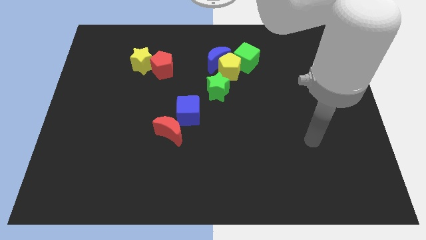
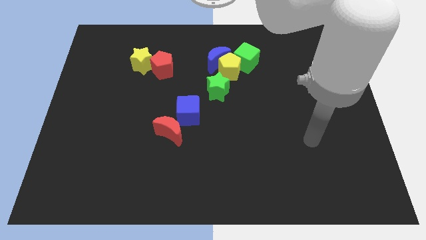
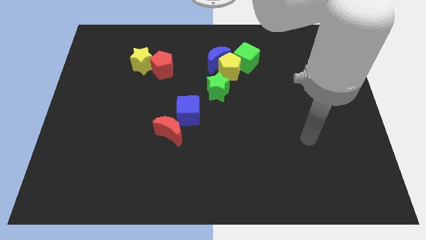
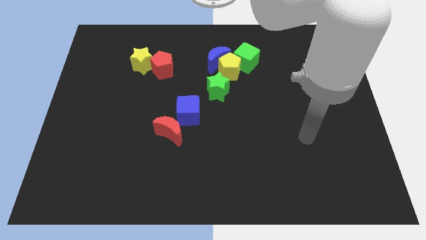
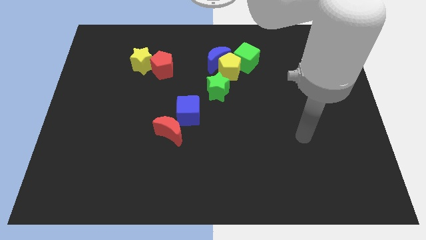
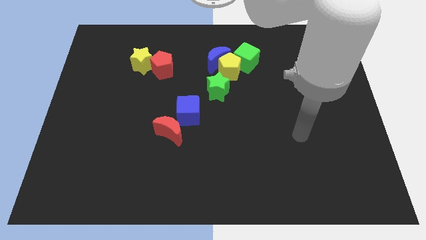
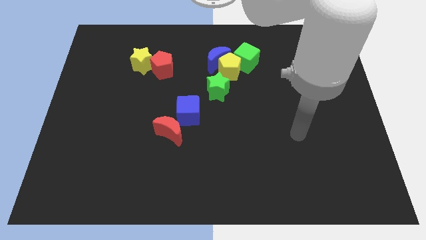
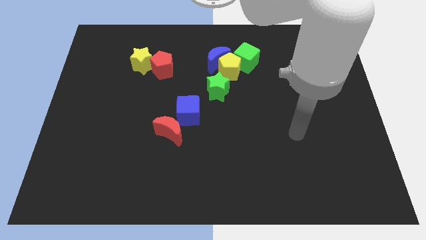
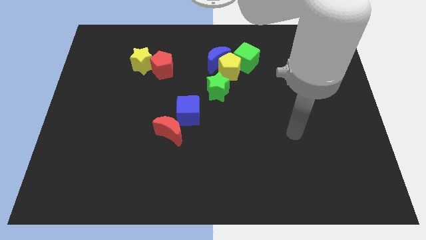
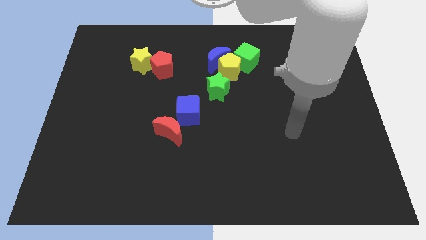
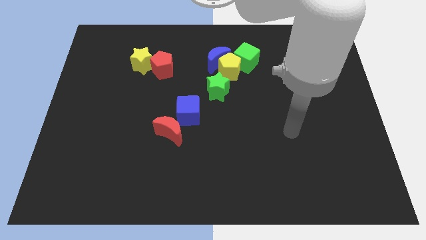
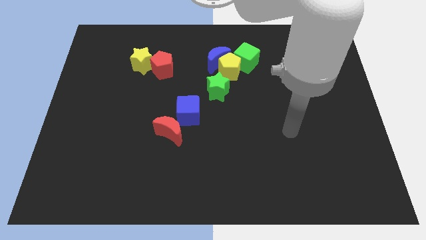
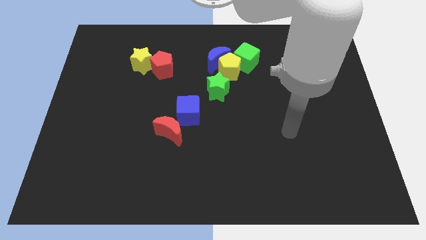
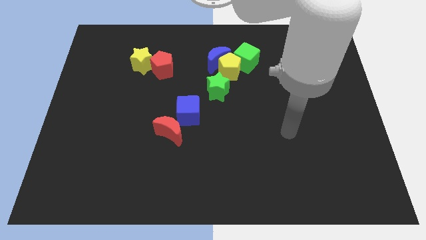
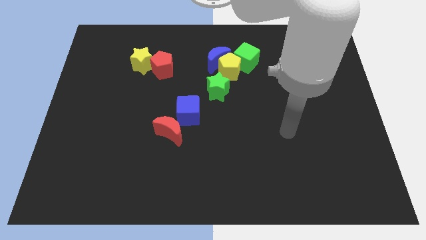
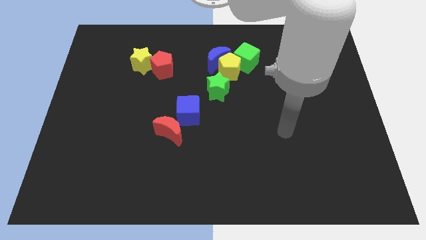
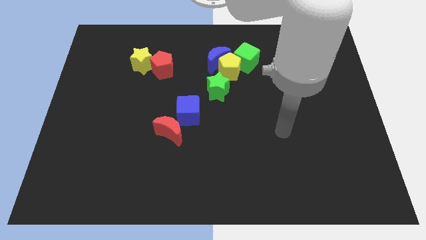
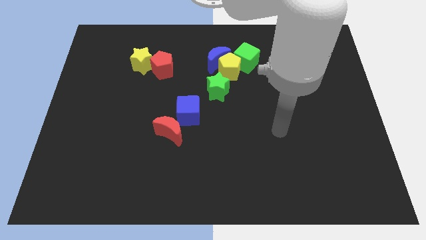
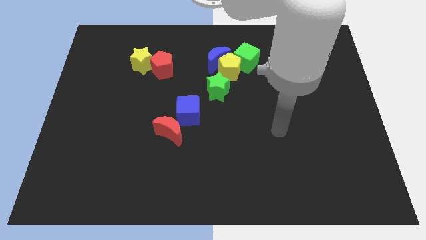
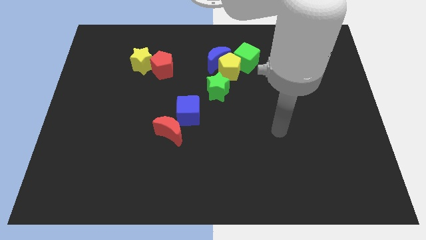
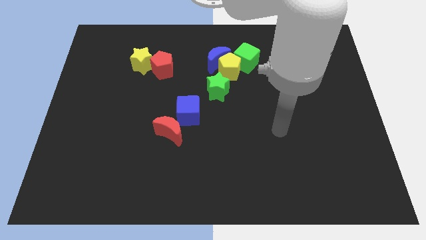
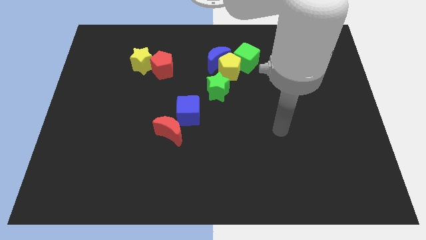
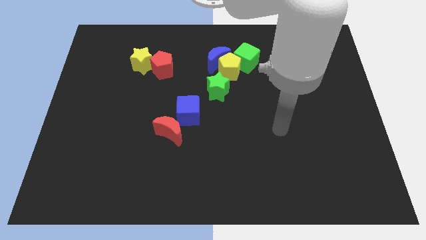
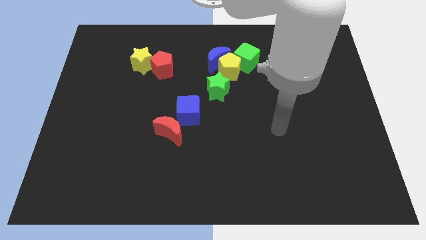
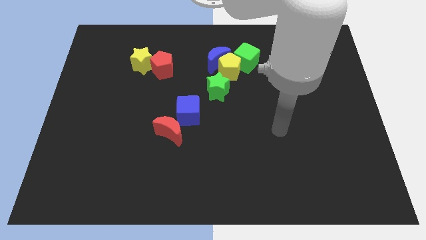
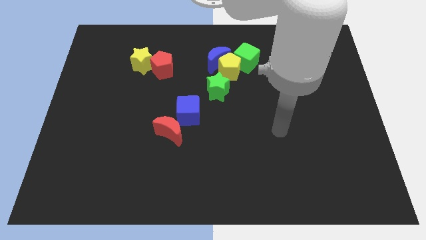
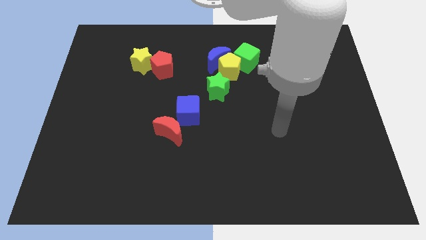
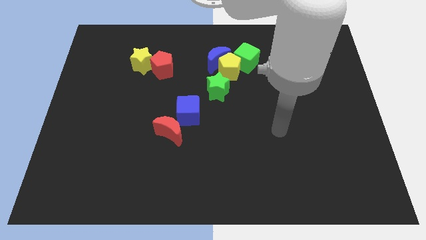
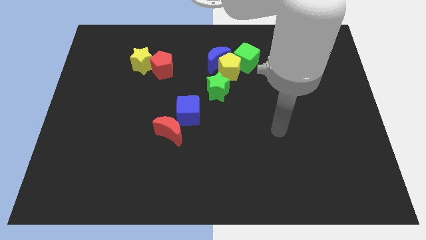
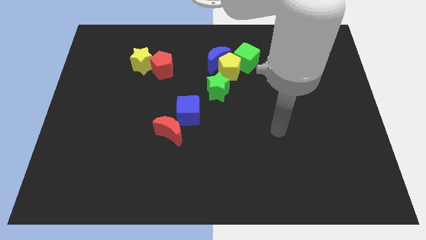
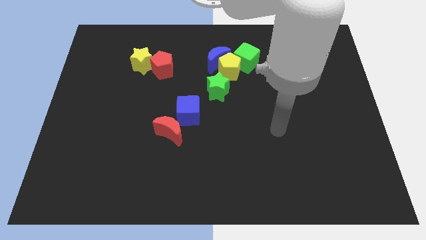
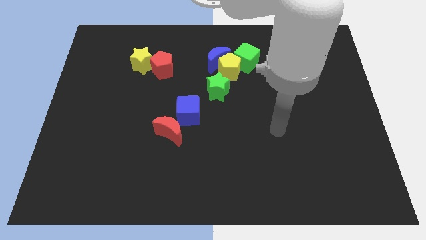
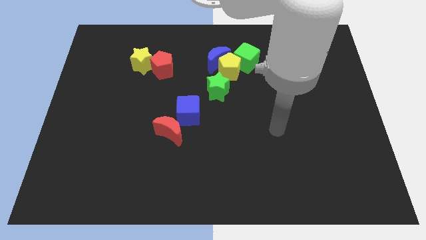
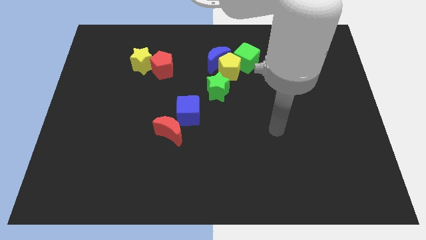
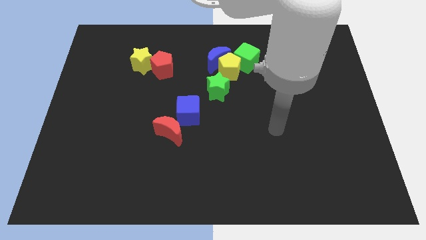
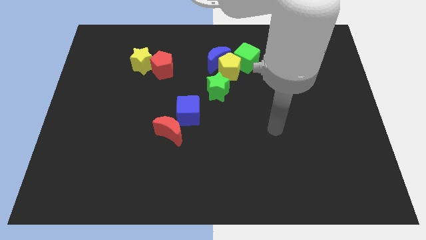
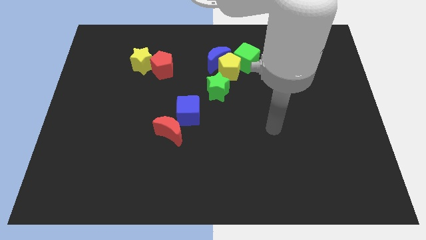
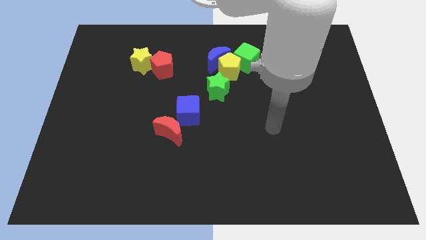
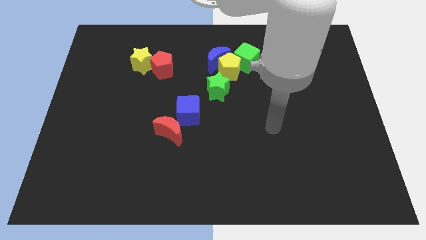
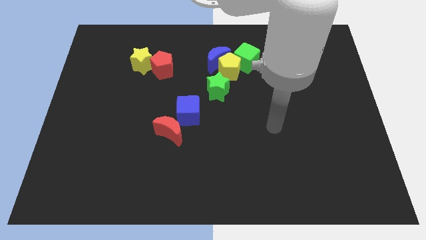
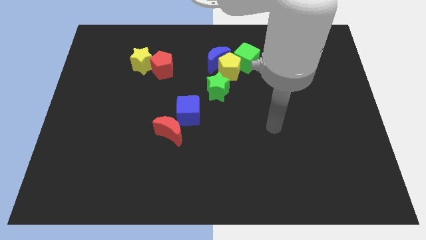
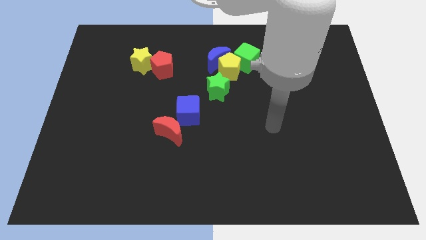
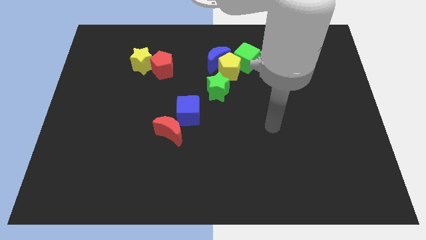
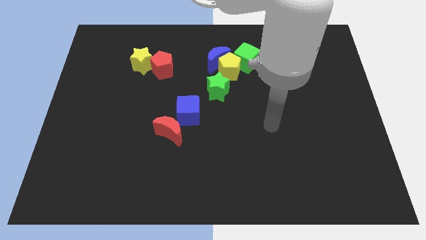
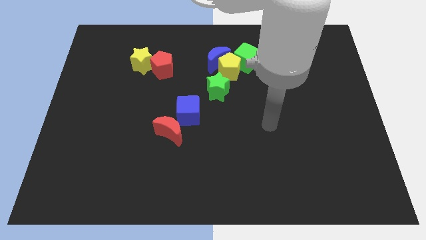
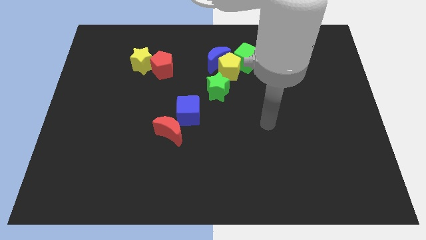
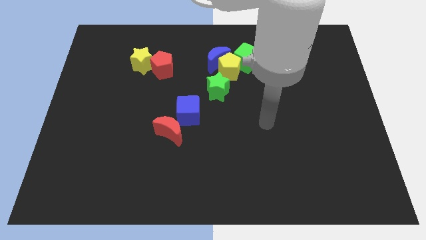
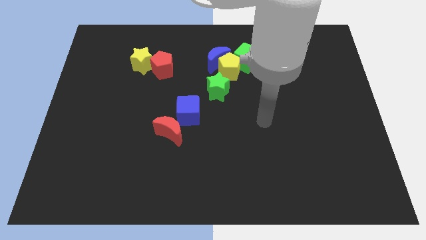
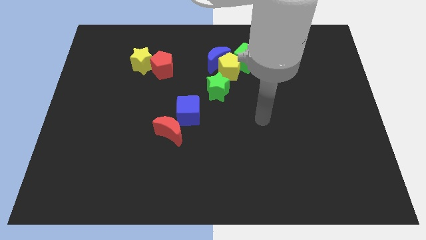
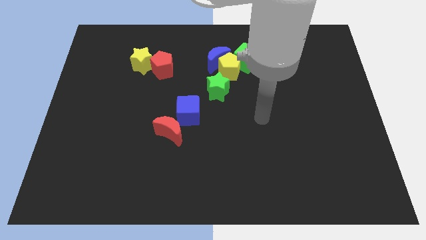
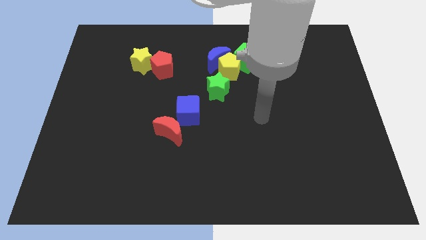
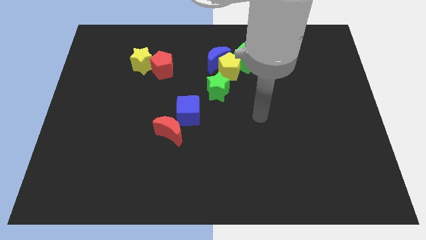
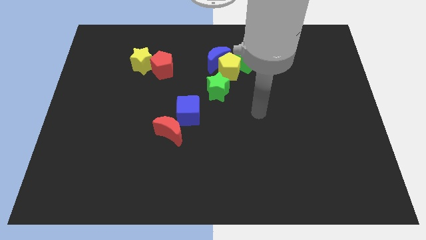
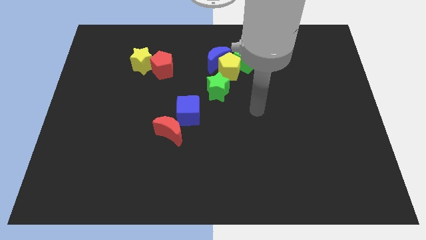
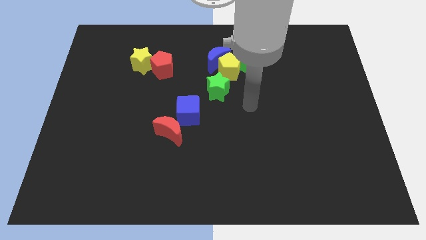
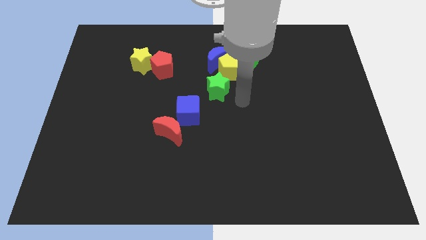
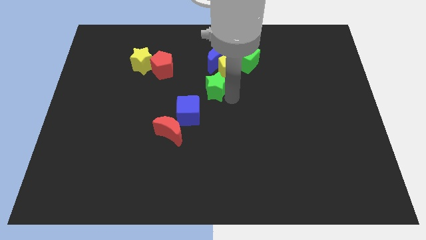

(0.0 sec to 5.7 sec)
place the arm right to the green star

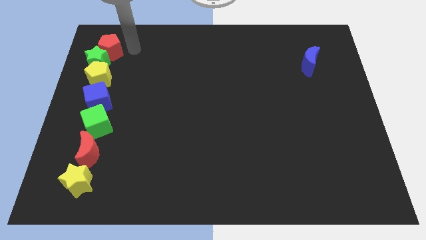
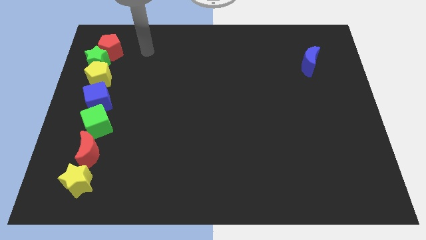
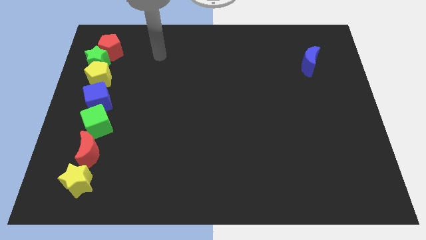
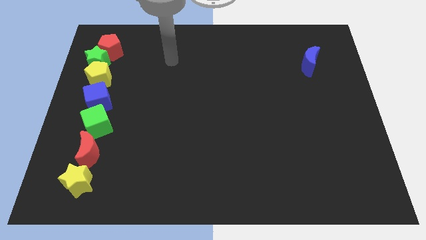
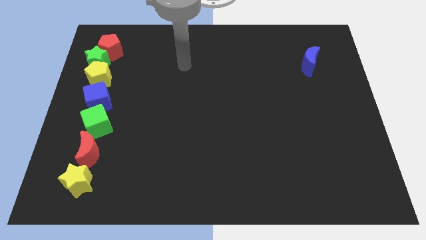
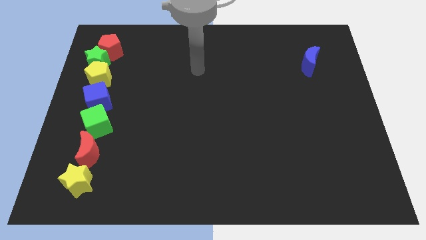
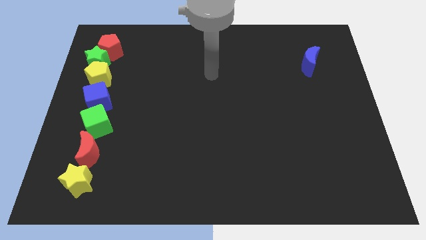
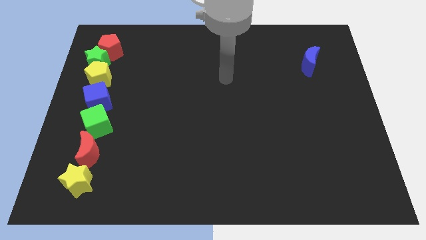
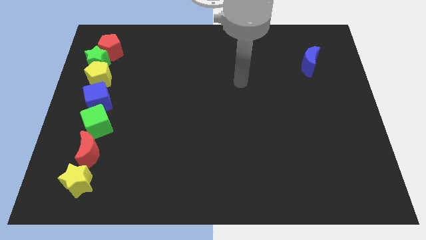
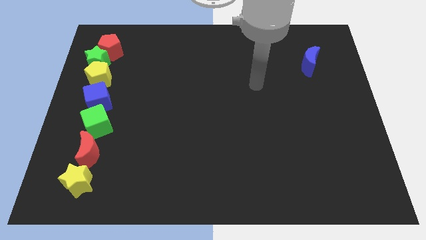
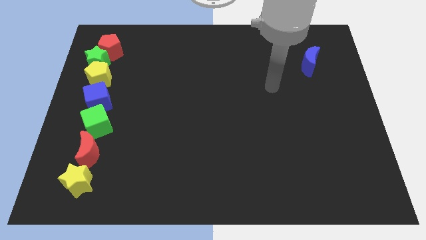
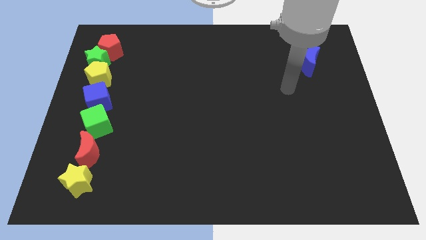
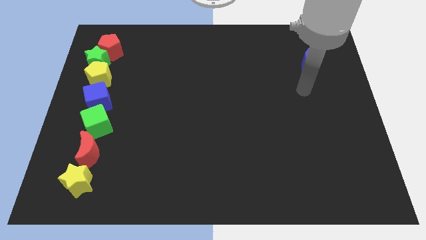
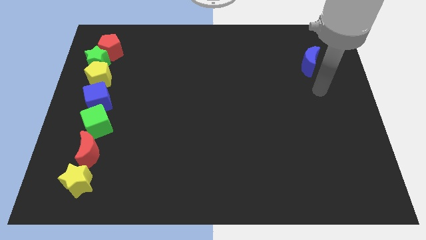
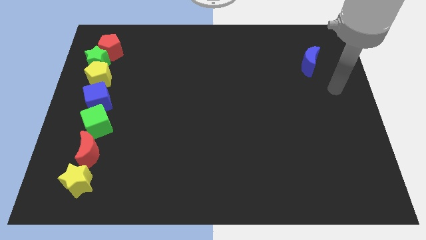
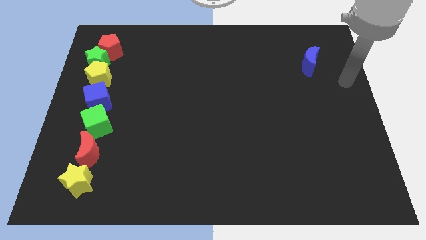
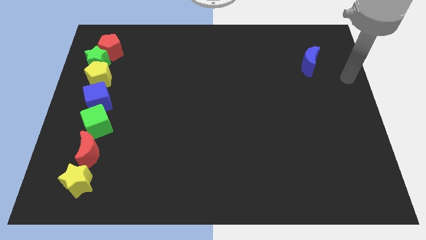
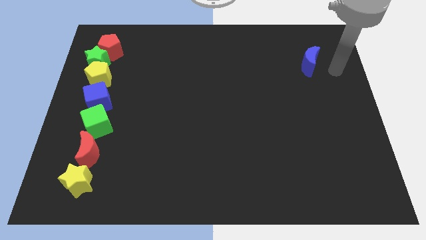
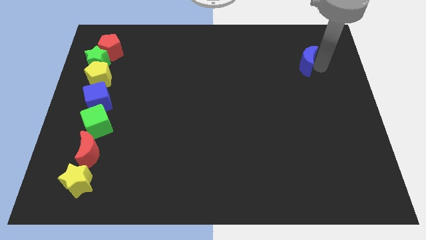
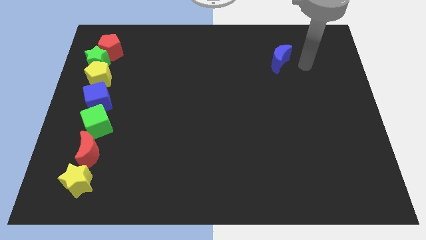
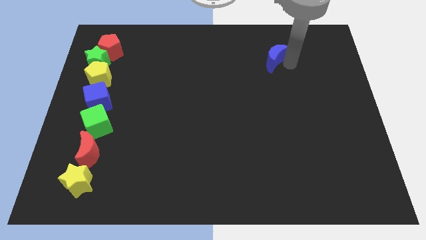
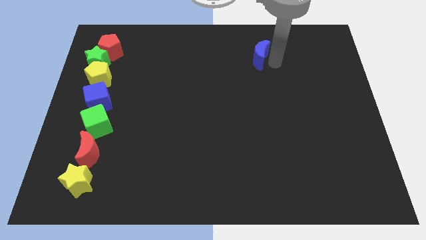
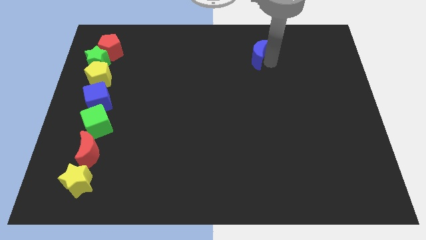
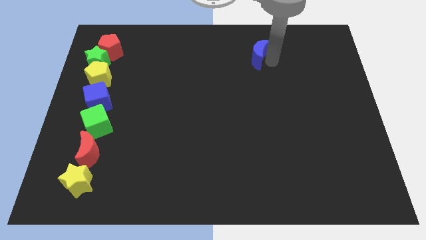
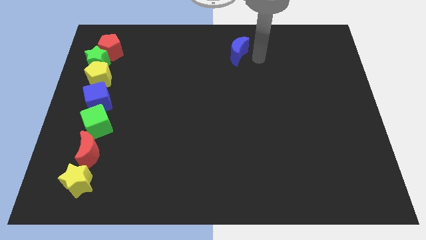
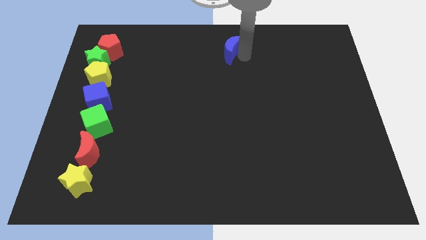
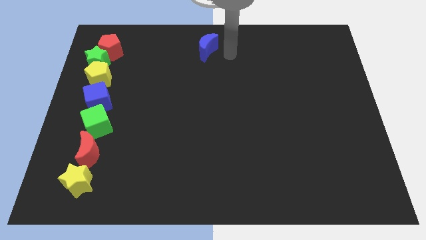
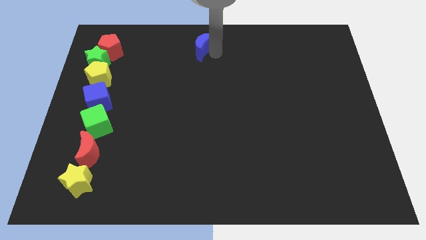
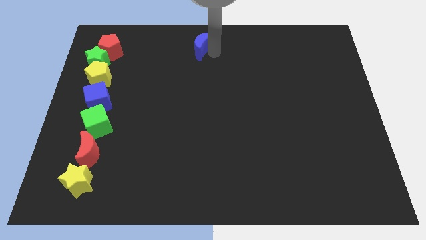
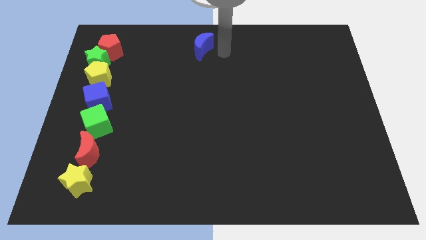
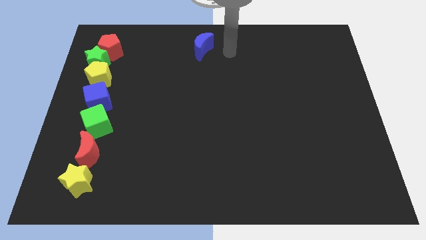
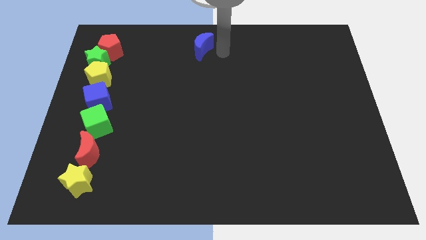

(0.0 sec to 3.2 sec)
push the blue crescent to the top center of the board
